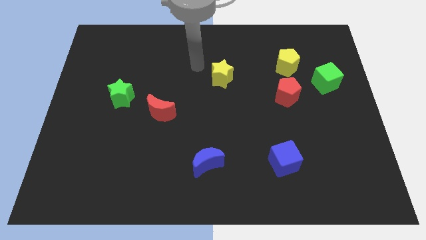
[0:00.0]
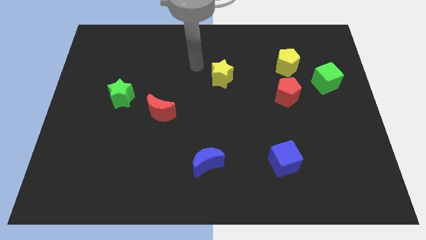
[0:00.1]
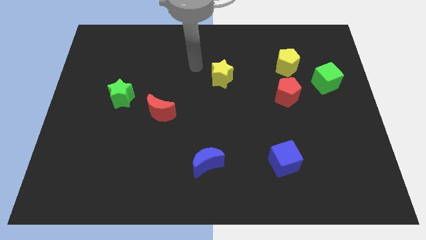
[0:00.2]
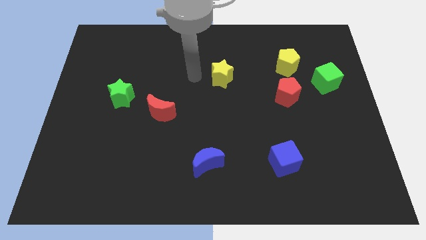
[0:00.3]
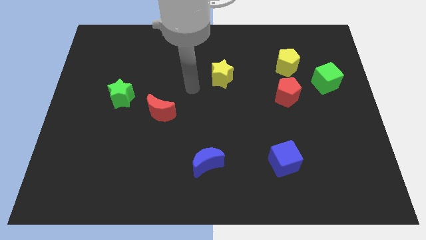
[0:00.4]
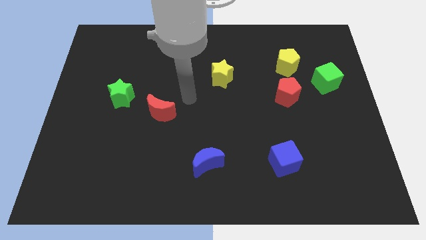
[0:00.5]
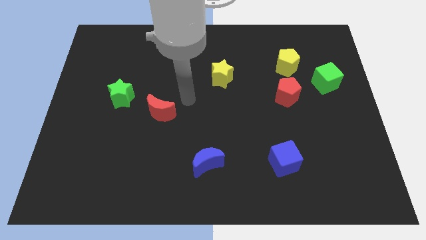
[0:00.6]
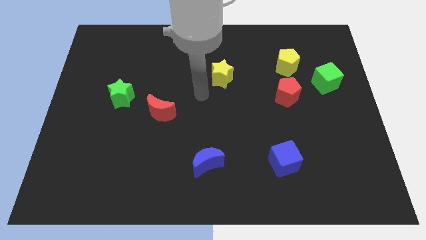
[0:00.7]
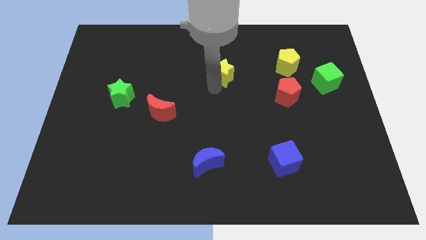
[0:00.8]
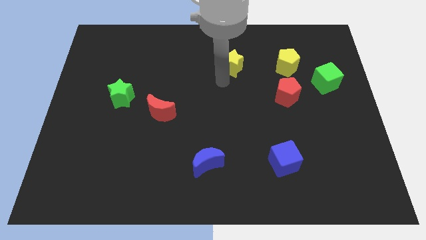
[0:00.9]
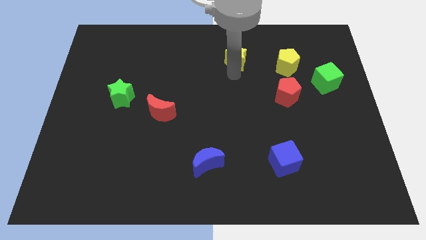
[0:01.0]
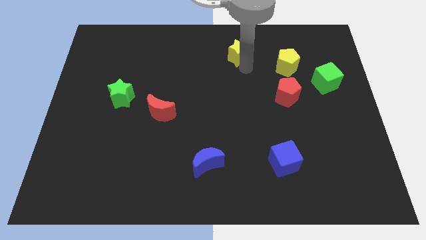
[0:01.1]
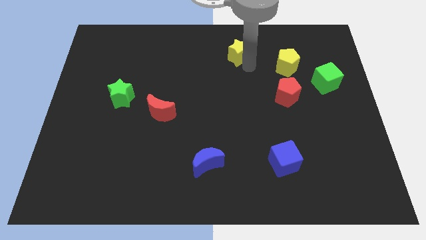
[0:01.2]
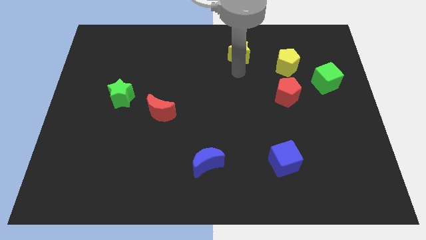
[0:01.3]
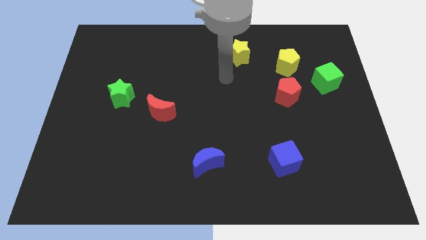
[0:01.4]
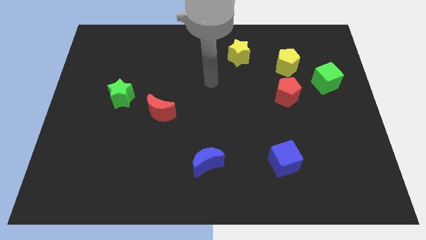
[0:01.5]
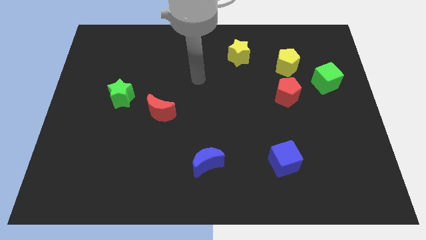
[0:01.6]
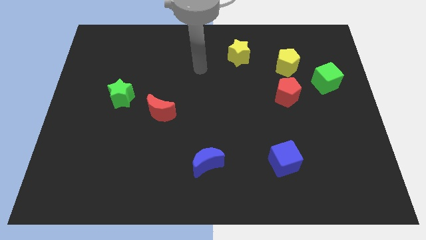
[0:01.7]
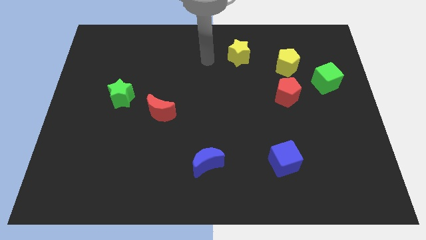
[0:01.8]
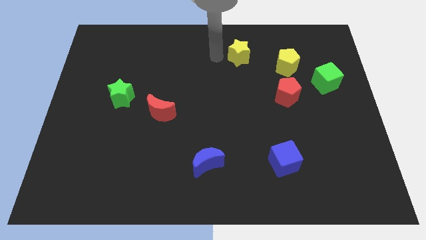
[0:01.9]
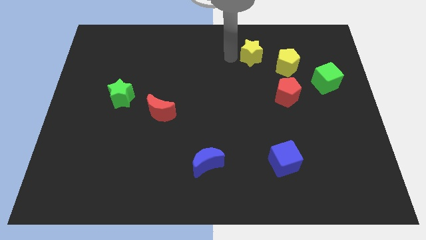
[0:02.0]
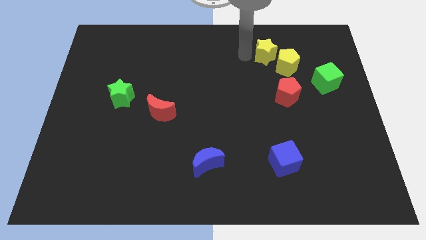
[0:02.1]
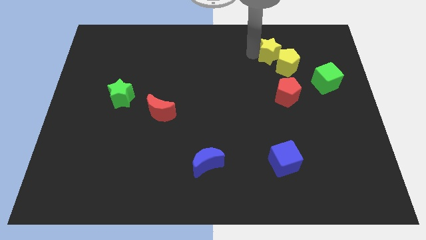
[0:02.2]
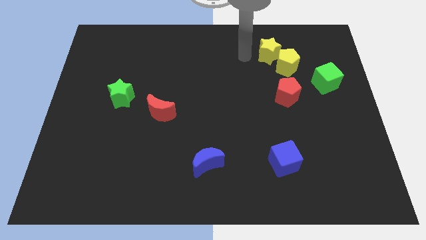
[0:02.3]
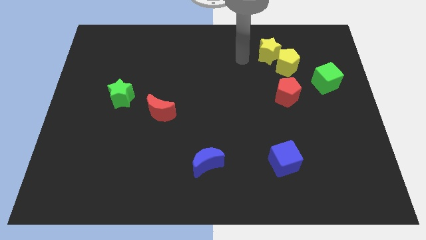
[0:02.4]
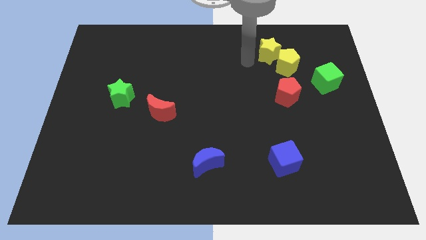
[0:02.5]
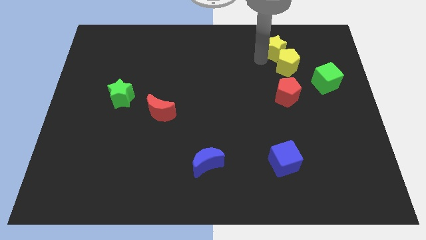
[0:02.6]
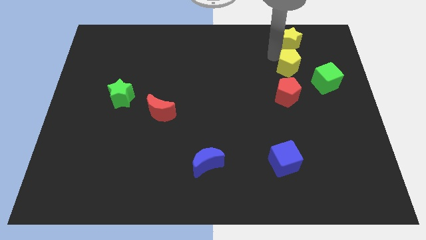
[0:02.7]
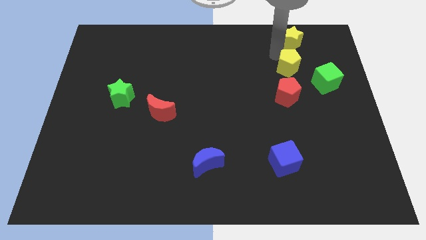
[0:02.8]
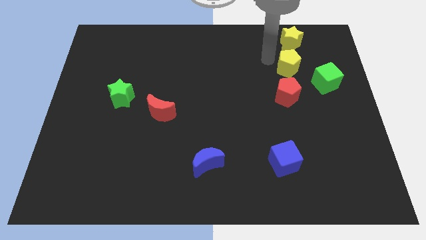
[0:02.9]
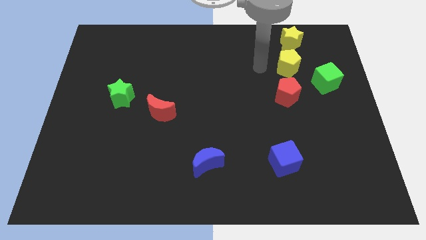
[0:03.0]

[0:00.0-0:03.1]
move the yellow star towards the right

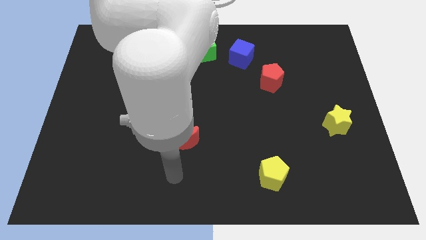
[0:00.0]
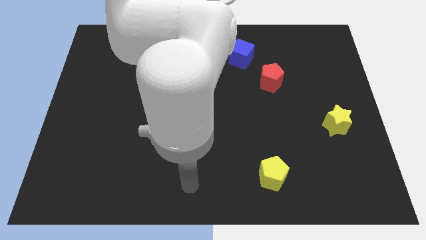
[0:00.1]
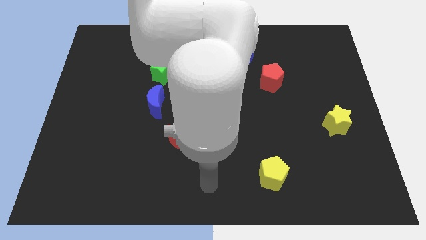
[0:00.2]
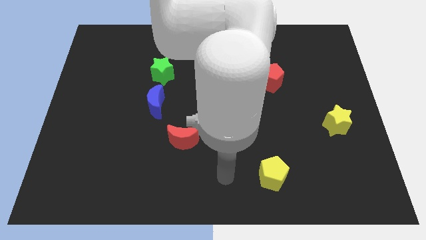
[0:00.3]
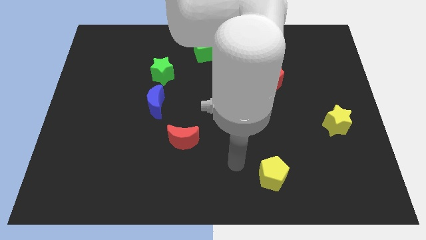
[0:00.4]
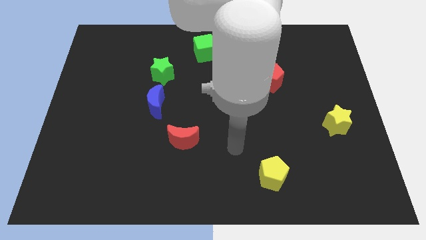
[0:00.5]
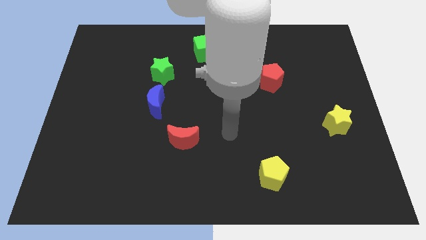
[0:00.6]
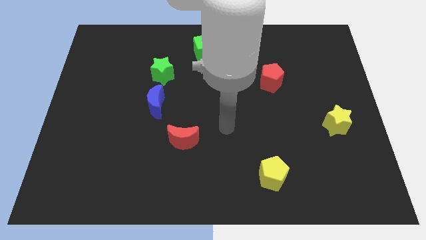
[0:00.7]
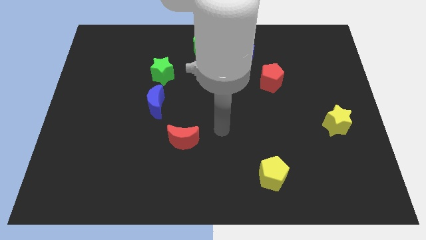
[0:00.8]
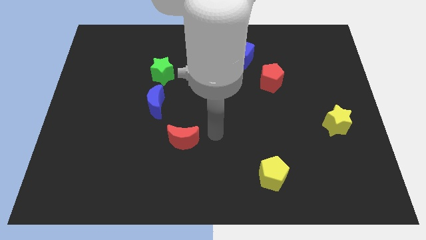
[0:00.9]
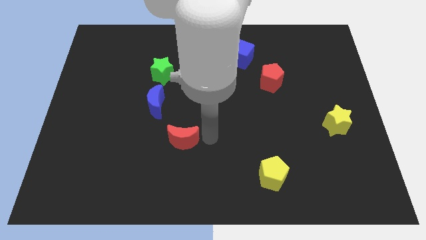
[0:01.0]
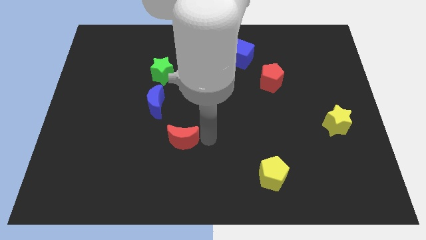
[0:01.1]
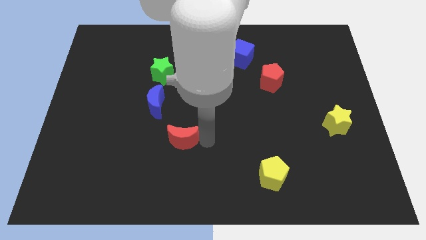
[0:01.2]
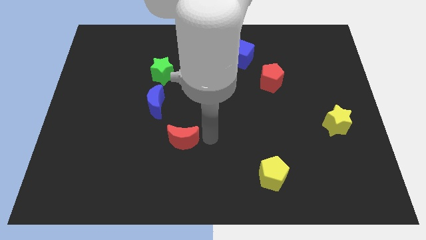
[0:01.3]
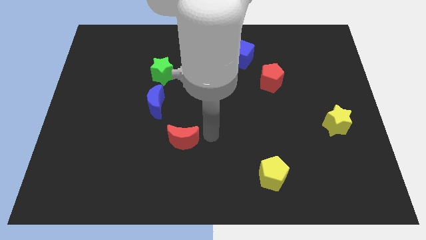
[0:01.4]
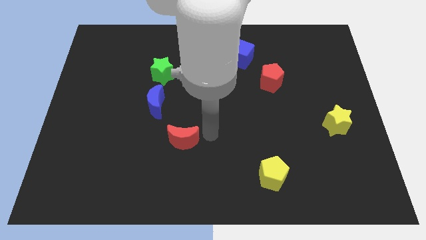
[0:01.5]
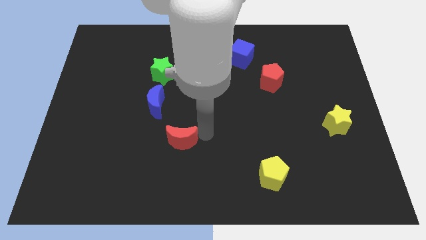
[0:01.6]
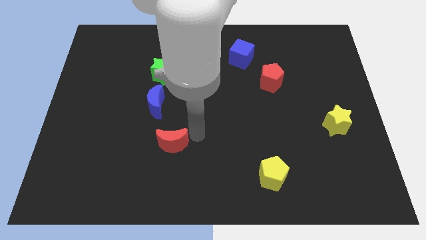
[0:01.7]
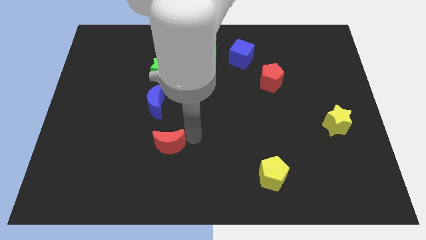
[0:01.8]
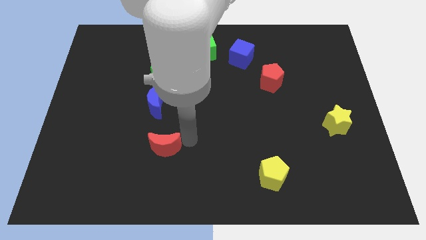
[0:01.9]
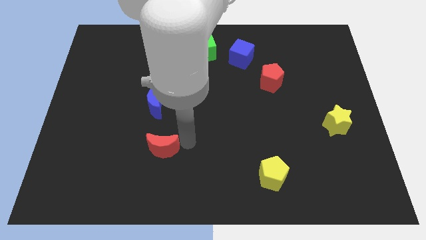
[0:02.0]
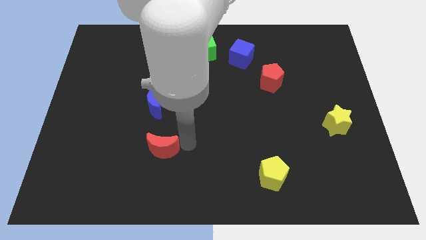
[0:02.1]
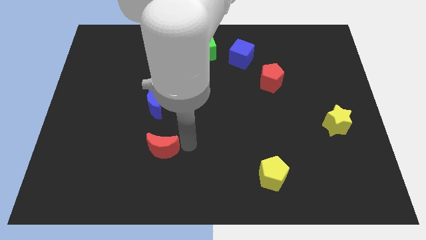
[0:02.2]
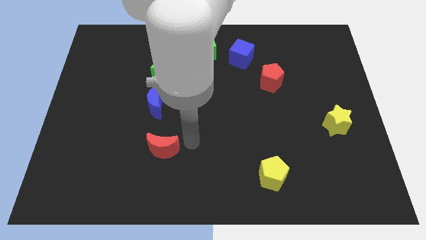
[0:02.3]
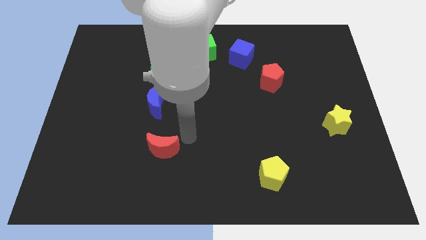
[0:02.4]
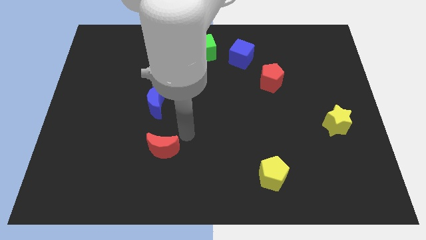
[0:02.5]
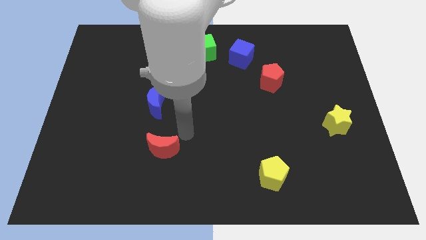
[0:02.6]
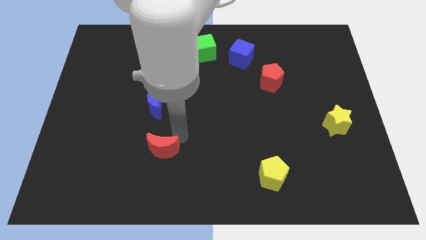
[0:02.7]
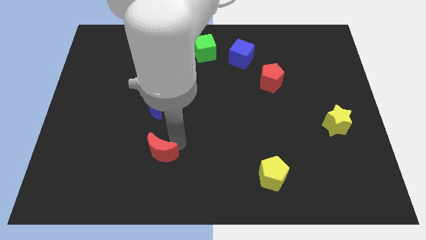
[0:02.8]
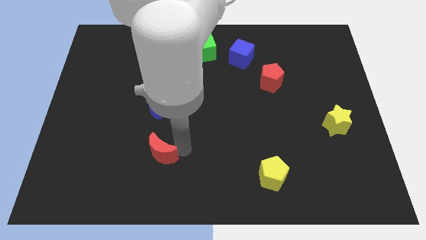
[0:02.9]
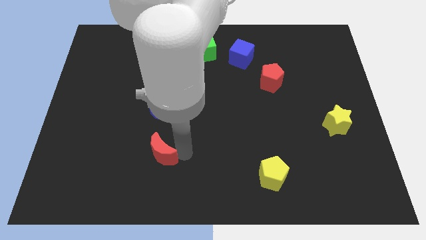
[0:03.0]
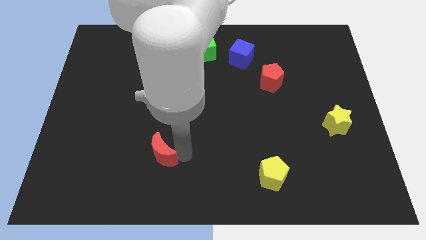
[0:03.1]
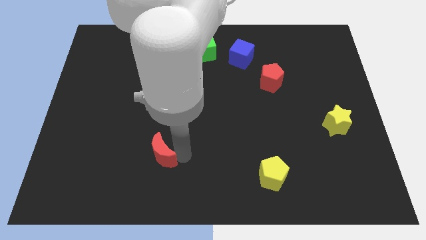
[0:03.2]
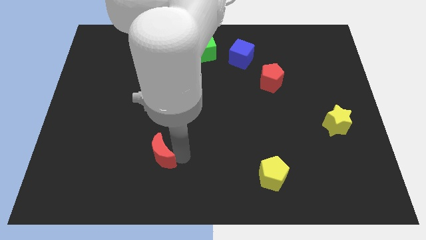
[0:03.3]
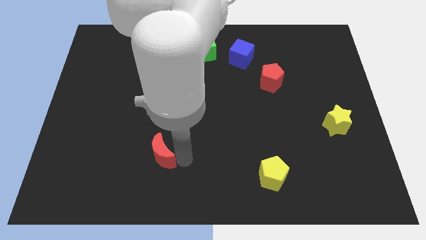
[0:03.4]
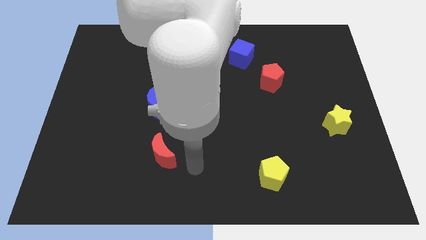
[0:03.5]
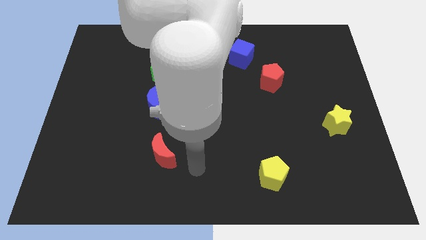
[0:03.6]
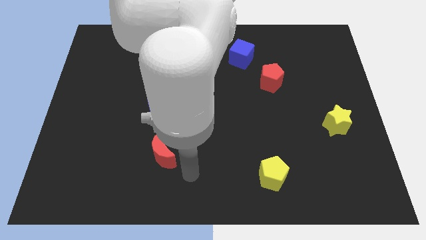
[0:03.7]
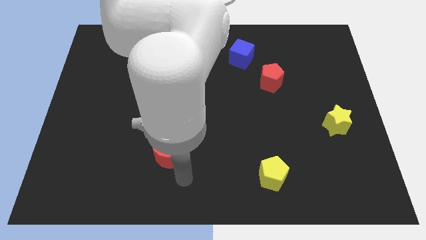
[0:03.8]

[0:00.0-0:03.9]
place the red moon below the blue moon

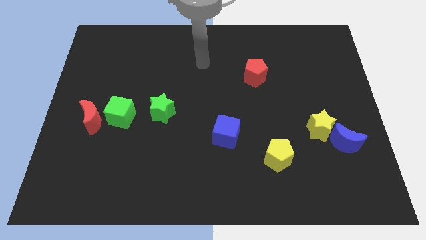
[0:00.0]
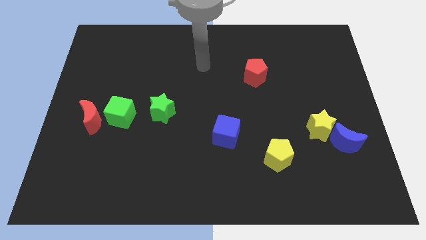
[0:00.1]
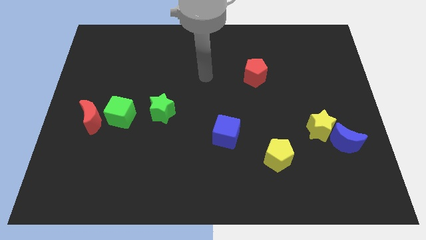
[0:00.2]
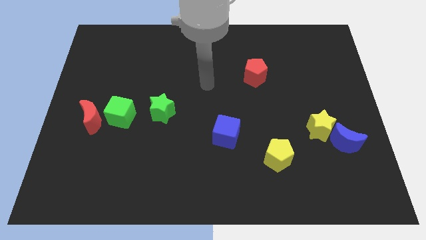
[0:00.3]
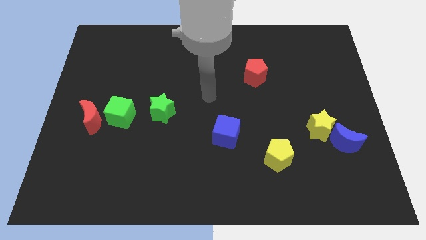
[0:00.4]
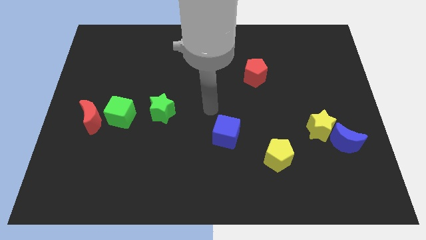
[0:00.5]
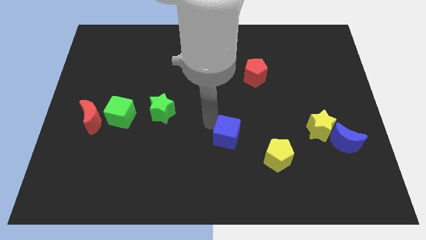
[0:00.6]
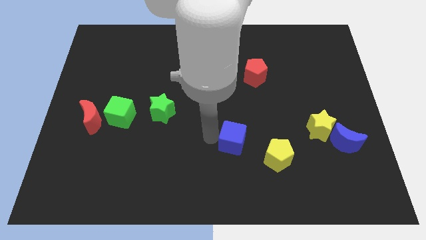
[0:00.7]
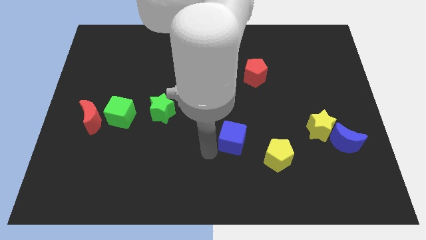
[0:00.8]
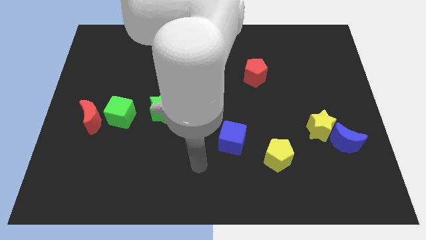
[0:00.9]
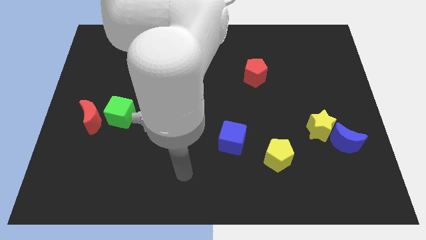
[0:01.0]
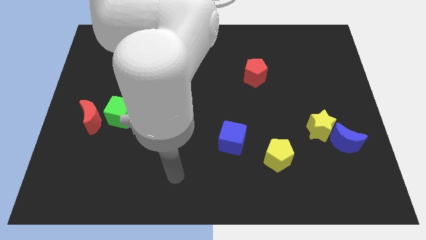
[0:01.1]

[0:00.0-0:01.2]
move the blue cube slightly towards the yellow pentagon

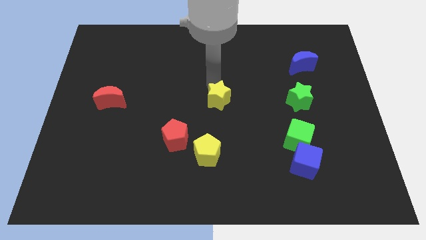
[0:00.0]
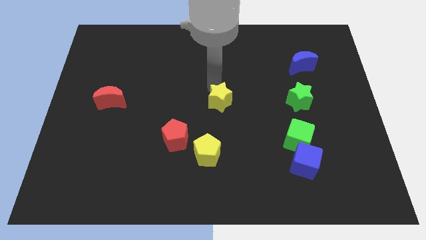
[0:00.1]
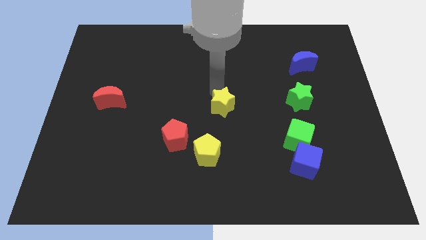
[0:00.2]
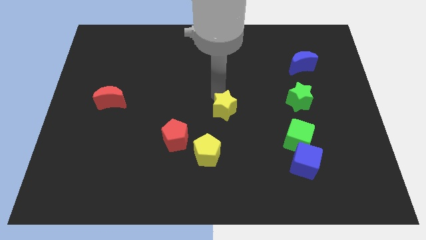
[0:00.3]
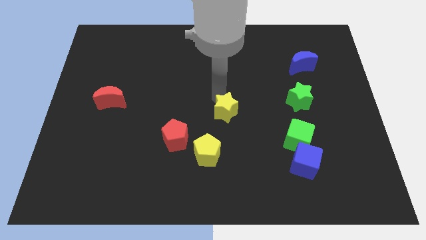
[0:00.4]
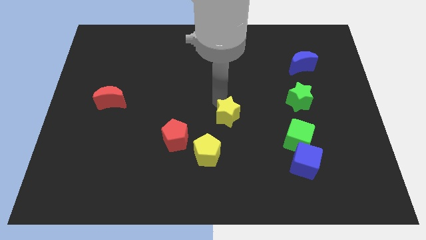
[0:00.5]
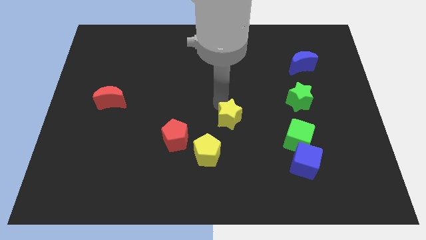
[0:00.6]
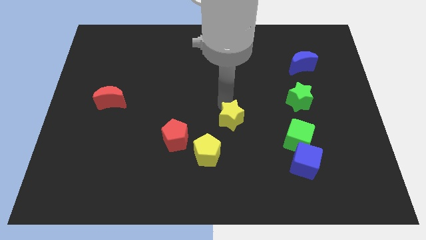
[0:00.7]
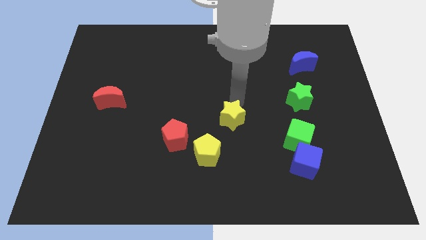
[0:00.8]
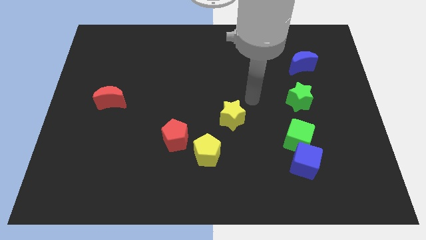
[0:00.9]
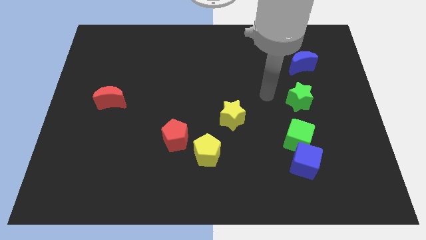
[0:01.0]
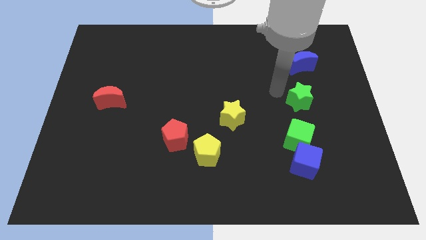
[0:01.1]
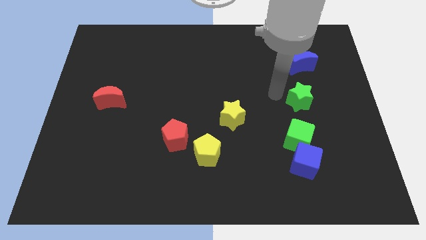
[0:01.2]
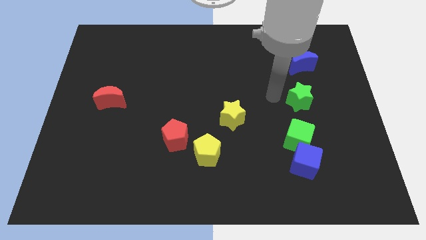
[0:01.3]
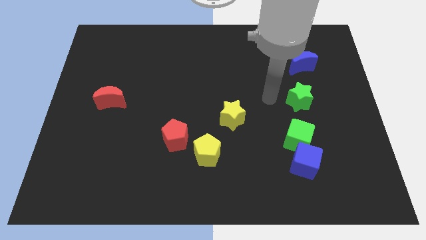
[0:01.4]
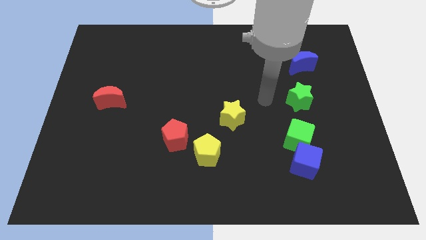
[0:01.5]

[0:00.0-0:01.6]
push the yellow star to the bottom left of the green star
